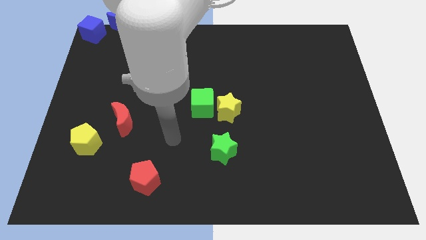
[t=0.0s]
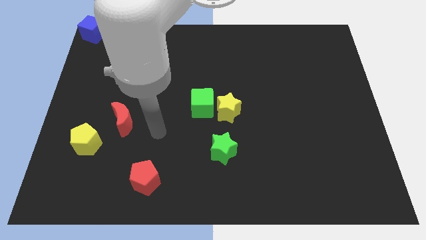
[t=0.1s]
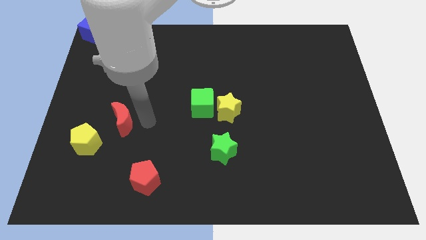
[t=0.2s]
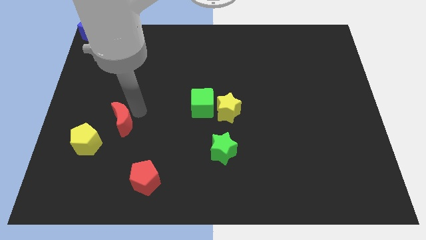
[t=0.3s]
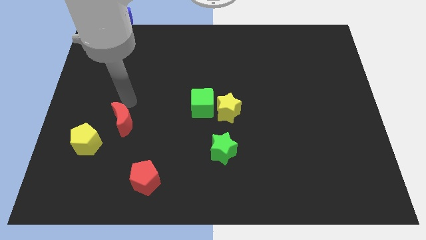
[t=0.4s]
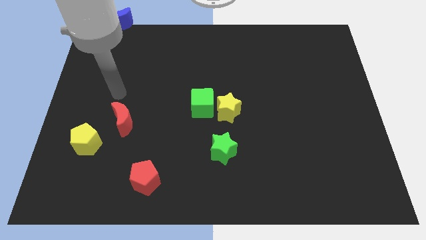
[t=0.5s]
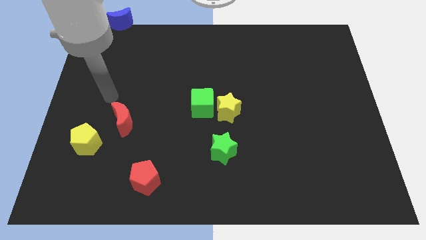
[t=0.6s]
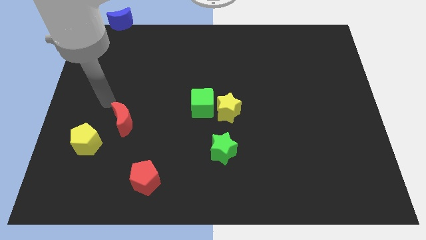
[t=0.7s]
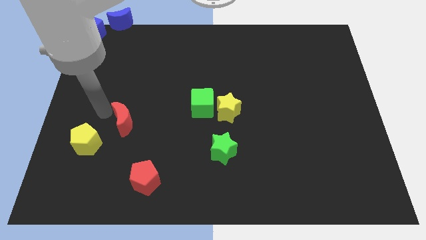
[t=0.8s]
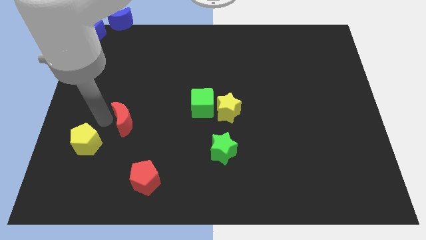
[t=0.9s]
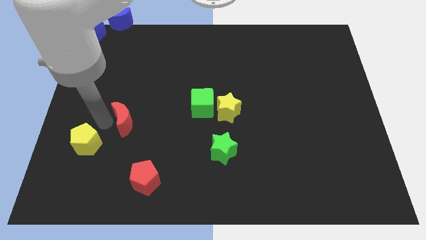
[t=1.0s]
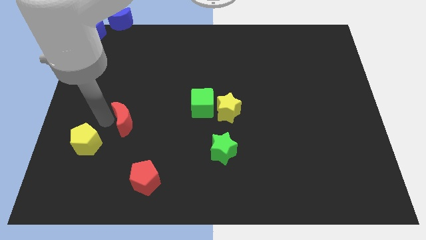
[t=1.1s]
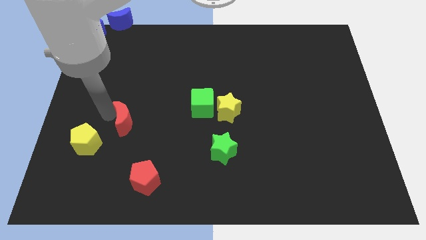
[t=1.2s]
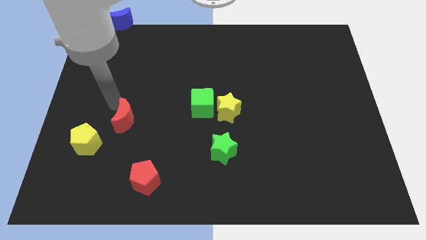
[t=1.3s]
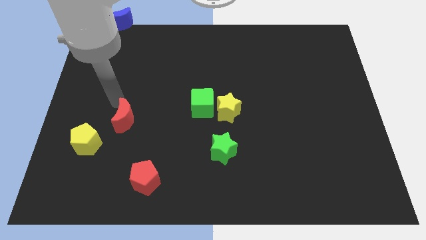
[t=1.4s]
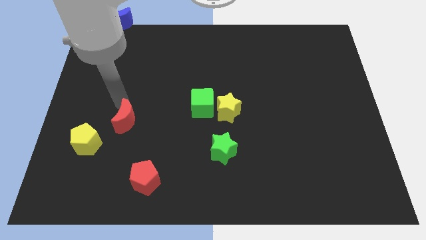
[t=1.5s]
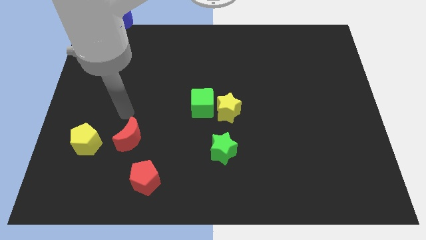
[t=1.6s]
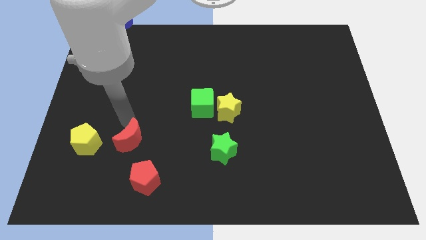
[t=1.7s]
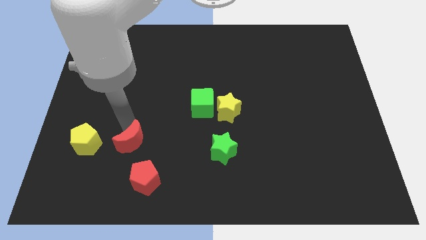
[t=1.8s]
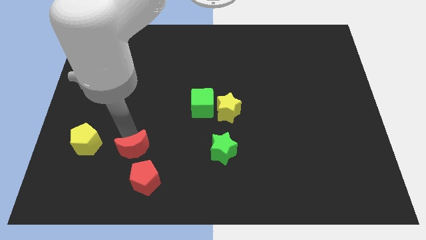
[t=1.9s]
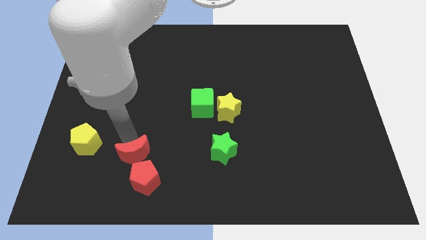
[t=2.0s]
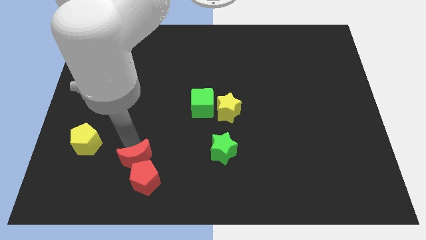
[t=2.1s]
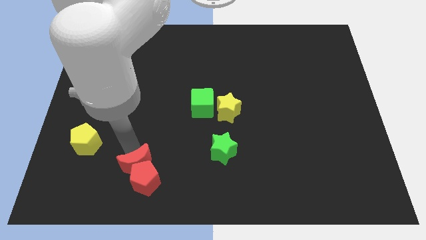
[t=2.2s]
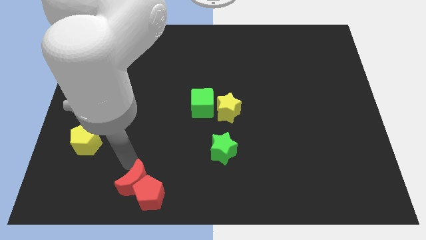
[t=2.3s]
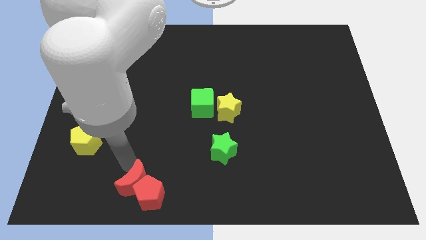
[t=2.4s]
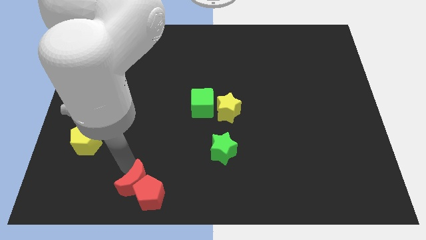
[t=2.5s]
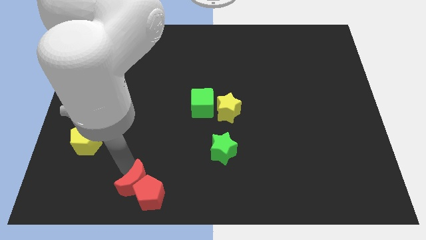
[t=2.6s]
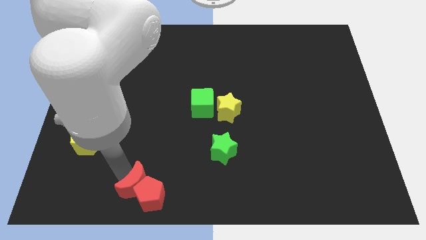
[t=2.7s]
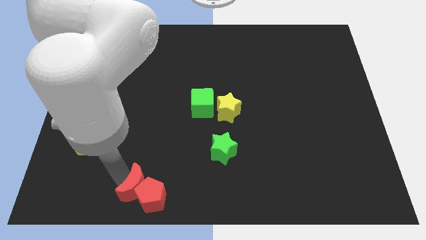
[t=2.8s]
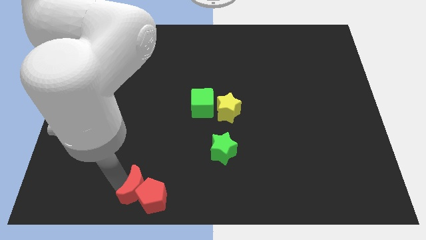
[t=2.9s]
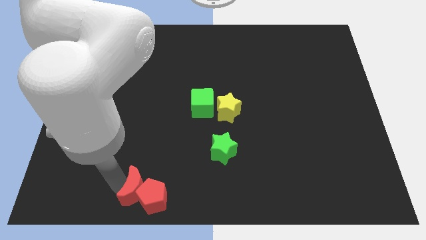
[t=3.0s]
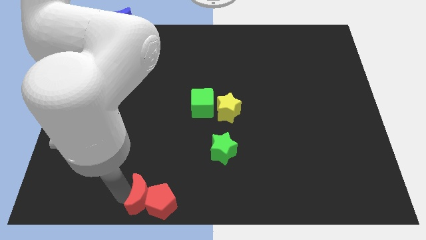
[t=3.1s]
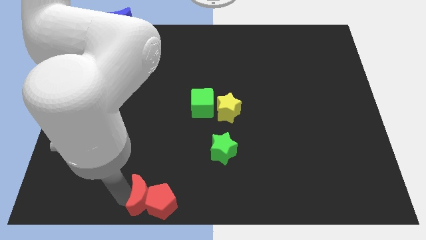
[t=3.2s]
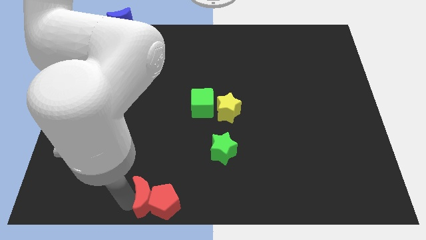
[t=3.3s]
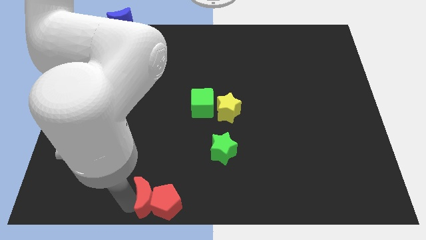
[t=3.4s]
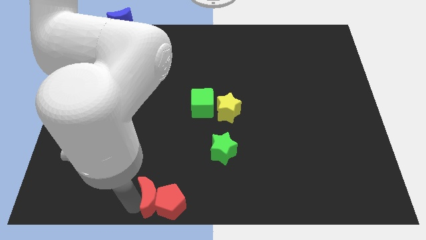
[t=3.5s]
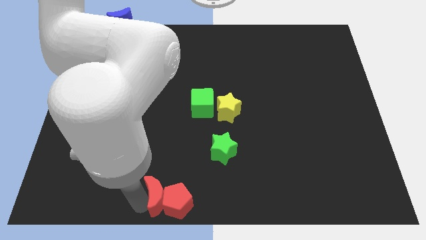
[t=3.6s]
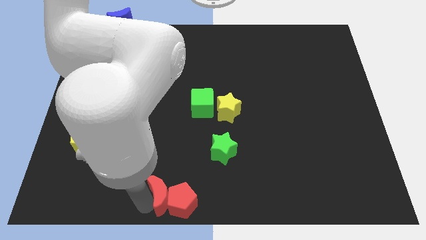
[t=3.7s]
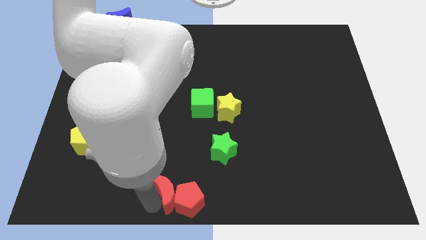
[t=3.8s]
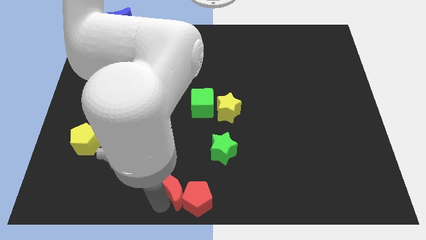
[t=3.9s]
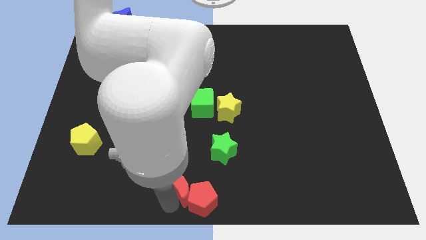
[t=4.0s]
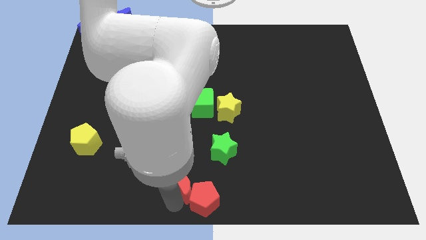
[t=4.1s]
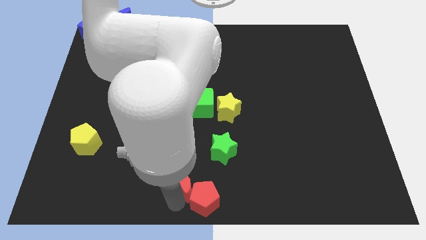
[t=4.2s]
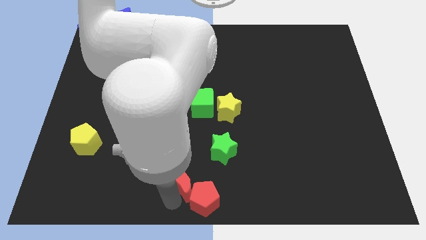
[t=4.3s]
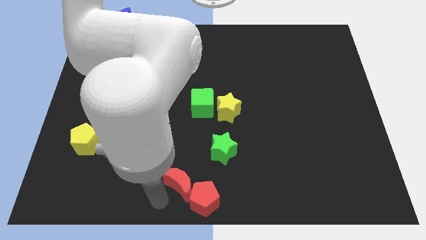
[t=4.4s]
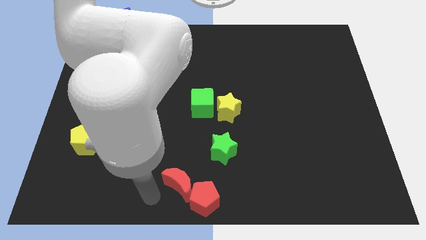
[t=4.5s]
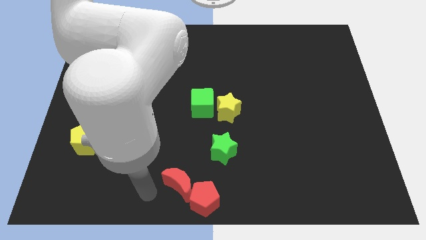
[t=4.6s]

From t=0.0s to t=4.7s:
move the red blocks to the bottom center

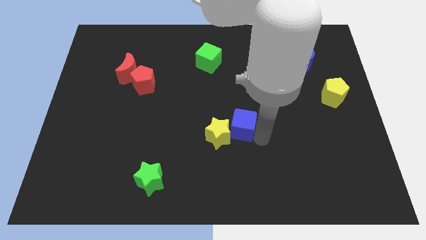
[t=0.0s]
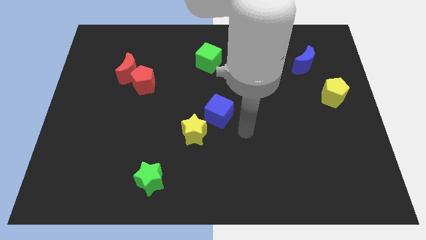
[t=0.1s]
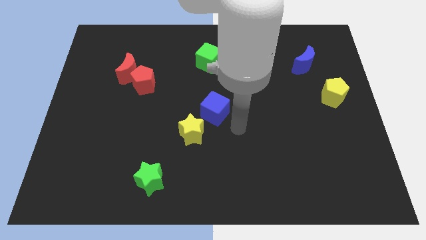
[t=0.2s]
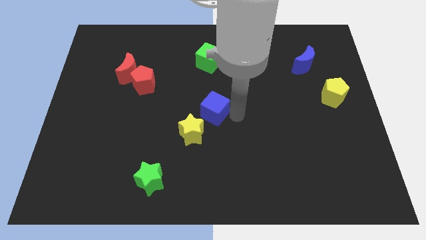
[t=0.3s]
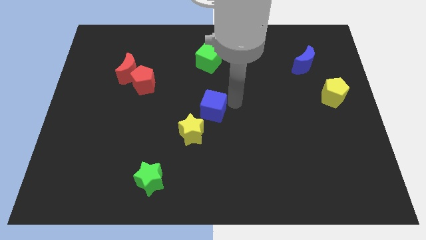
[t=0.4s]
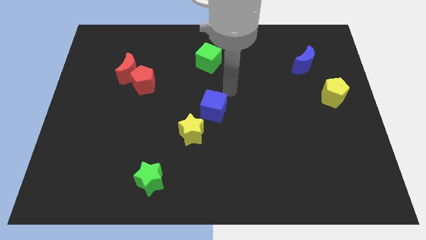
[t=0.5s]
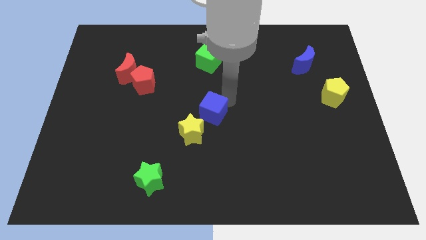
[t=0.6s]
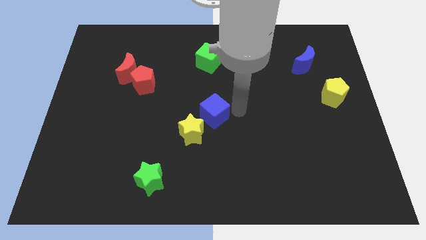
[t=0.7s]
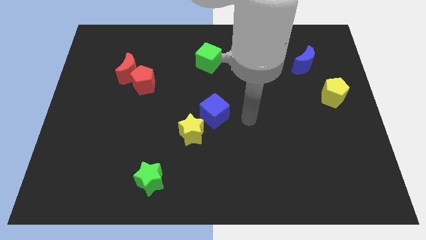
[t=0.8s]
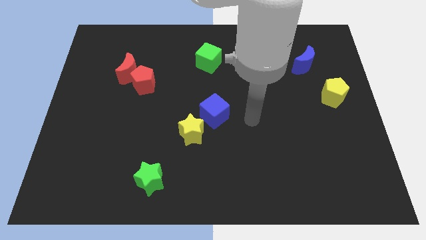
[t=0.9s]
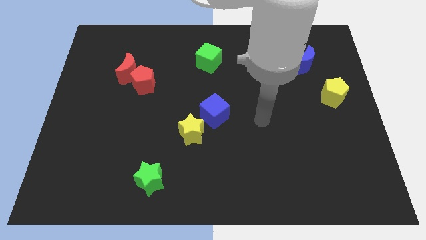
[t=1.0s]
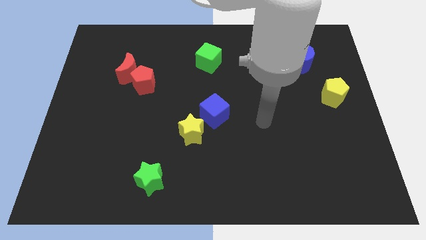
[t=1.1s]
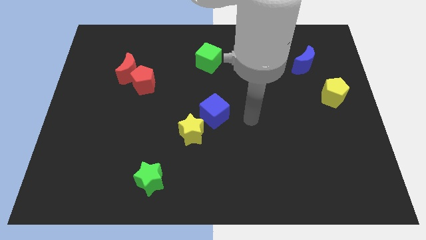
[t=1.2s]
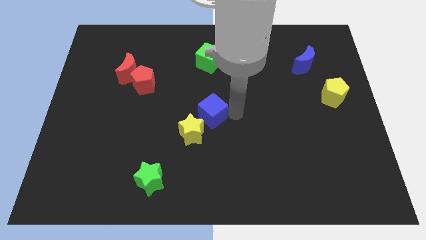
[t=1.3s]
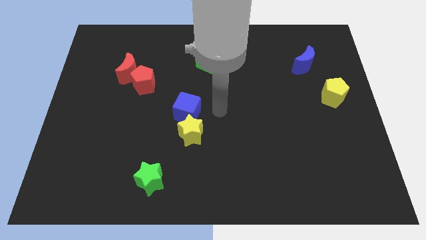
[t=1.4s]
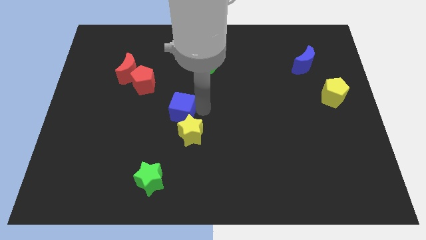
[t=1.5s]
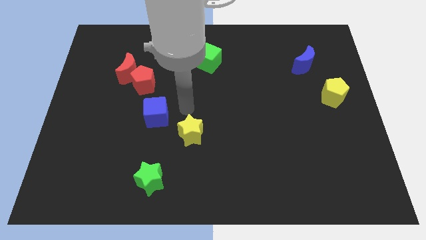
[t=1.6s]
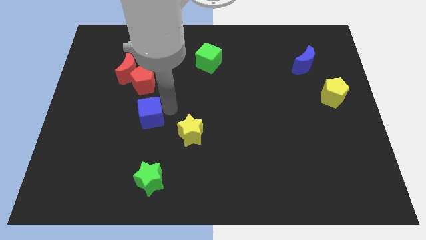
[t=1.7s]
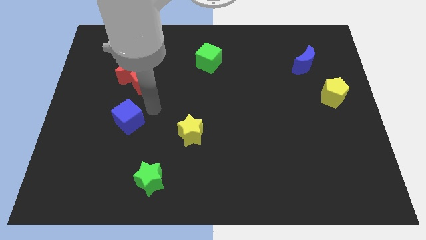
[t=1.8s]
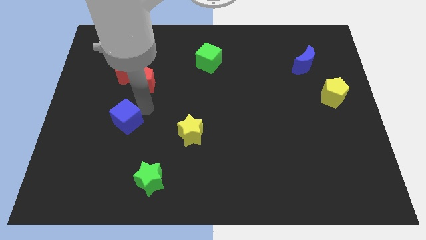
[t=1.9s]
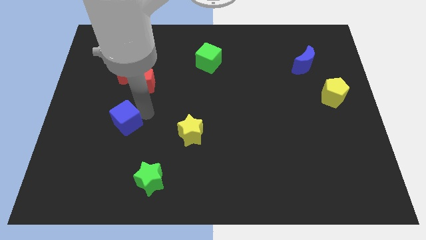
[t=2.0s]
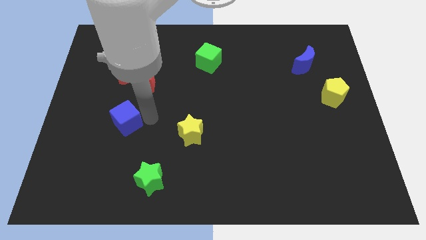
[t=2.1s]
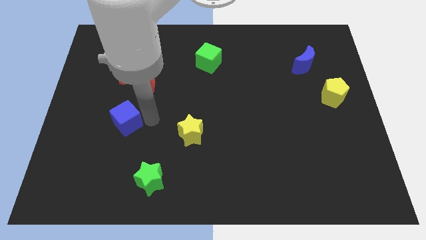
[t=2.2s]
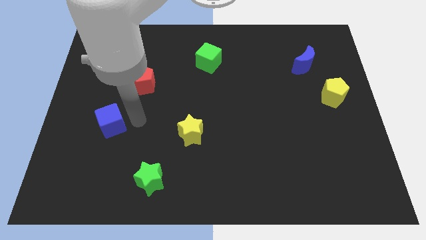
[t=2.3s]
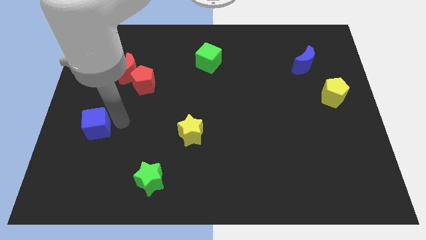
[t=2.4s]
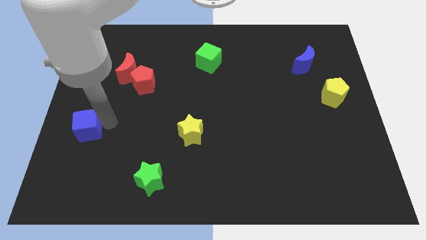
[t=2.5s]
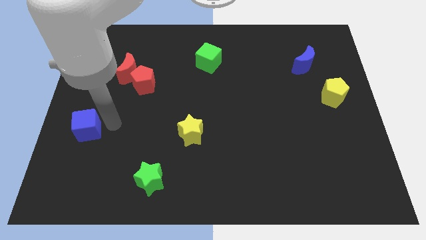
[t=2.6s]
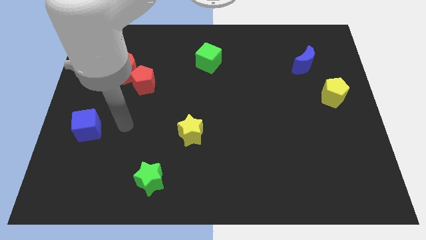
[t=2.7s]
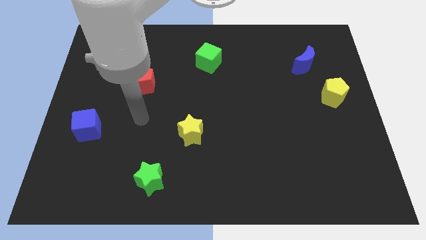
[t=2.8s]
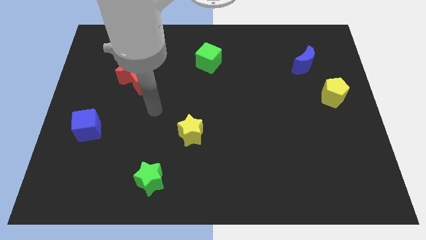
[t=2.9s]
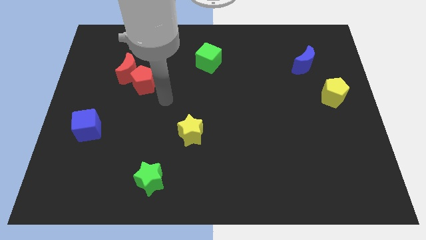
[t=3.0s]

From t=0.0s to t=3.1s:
separate blue cube from yellow star

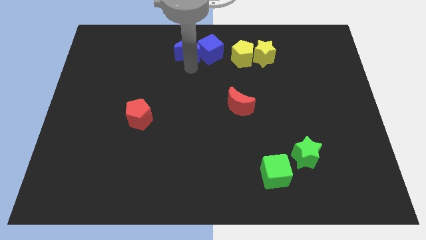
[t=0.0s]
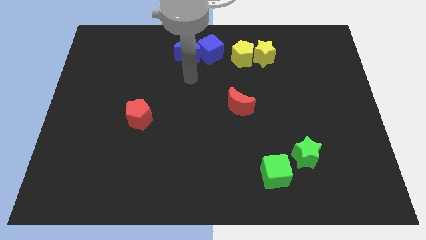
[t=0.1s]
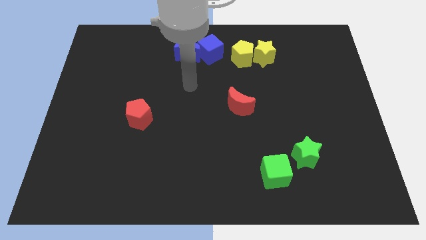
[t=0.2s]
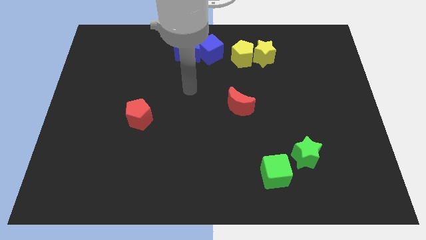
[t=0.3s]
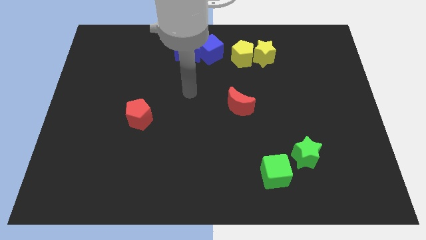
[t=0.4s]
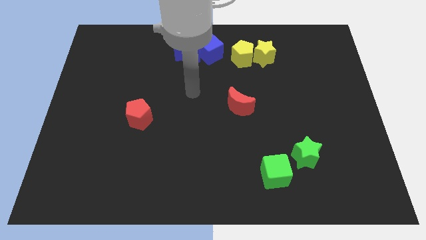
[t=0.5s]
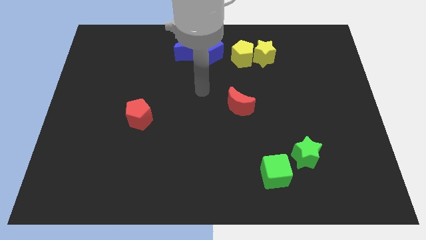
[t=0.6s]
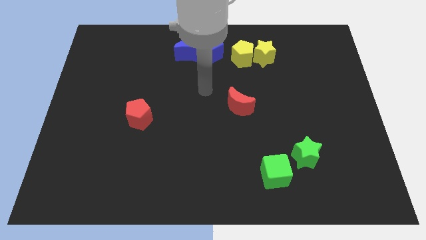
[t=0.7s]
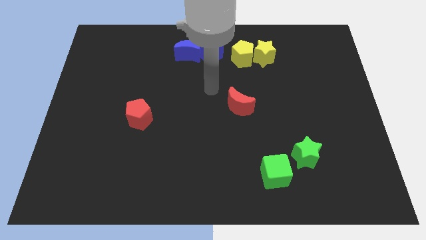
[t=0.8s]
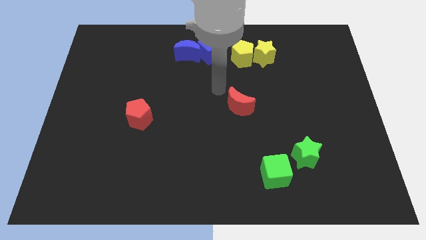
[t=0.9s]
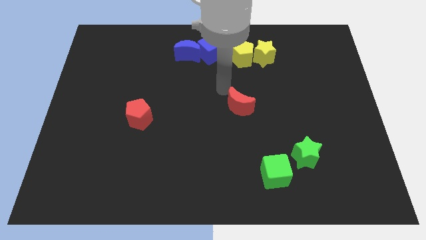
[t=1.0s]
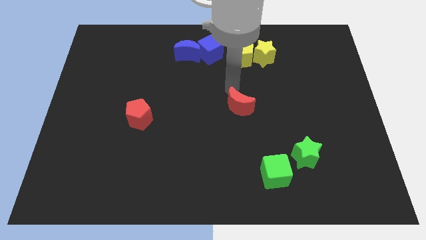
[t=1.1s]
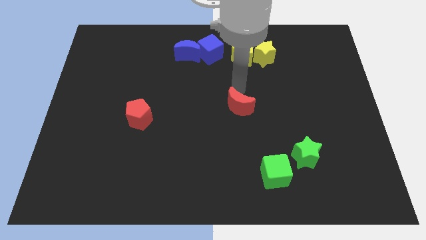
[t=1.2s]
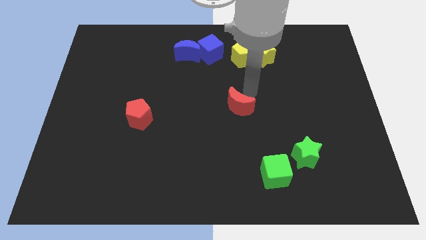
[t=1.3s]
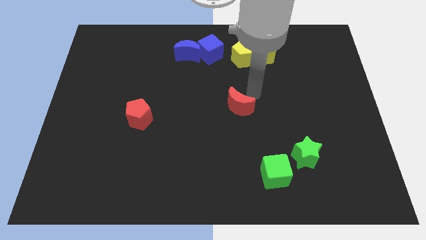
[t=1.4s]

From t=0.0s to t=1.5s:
point the arm above the red crescent
